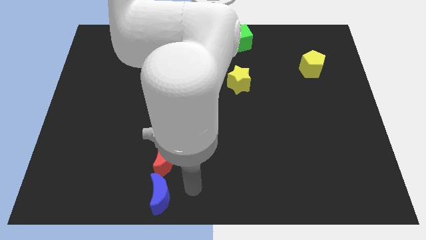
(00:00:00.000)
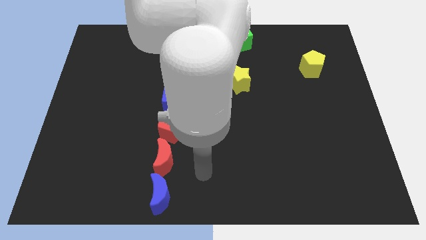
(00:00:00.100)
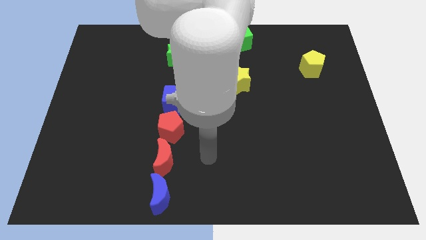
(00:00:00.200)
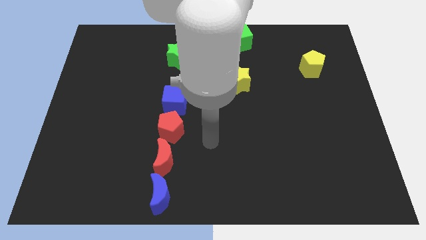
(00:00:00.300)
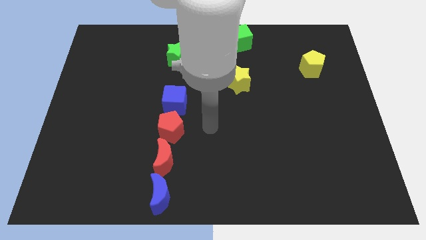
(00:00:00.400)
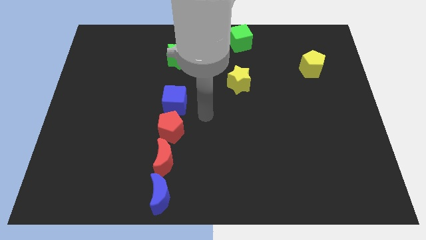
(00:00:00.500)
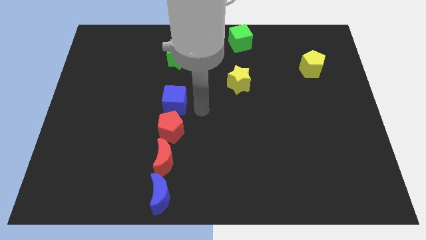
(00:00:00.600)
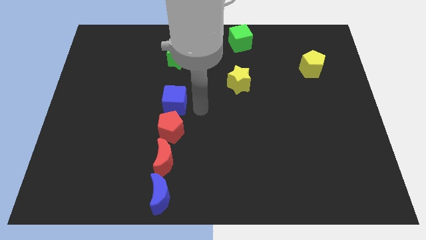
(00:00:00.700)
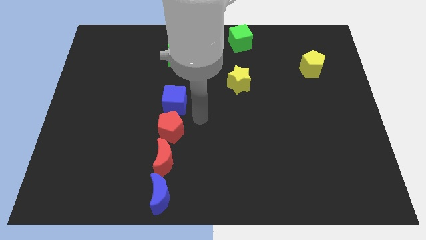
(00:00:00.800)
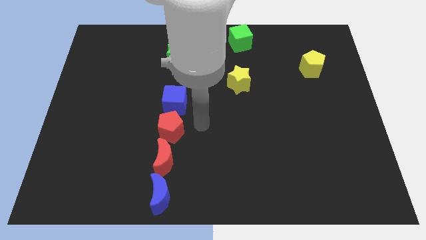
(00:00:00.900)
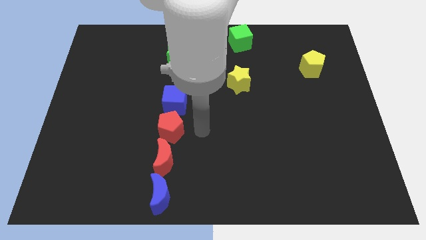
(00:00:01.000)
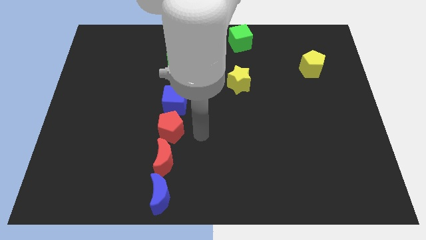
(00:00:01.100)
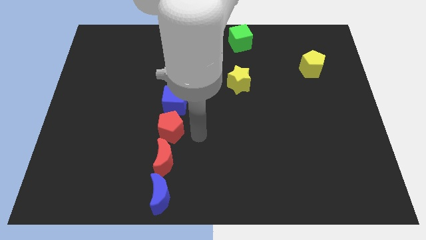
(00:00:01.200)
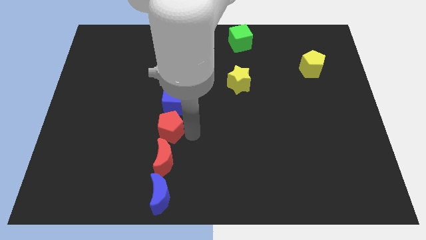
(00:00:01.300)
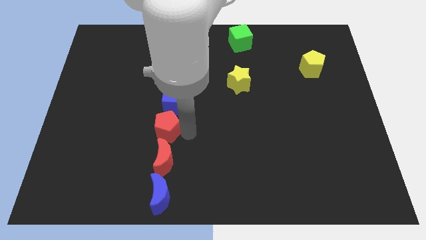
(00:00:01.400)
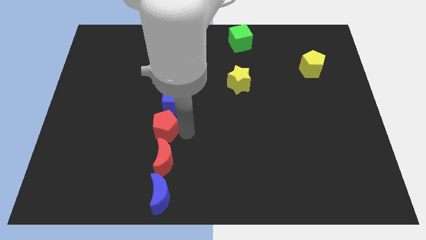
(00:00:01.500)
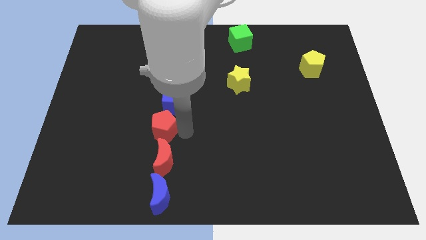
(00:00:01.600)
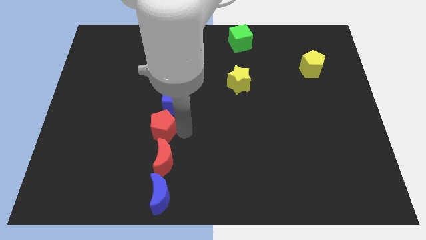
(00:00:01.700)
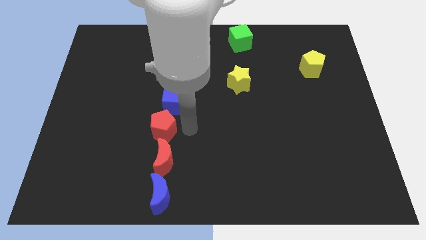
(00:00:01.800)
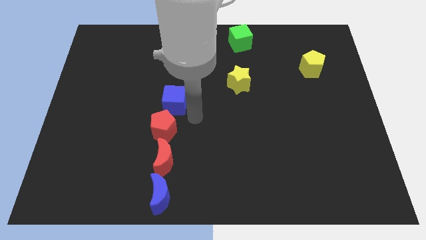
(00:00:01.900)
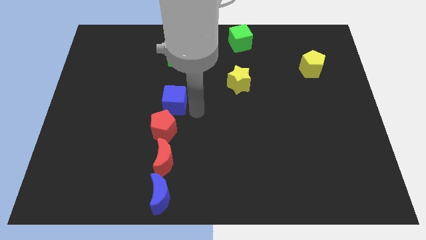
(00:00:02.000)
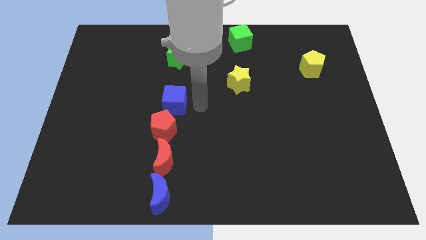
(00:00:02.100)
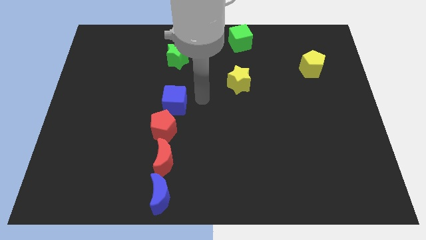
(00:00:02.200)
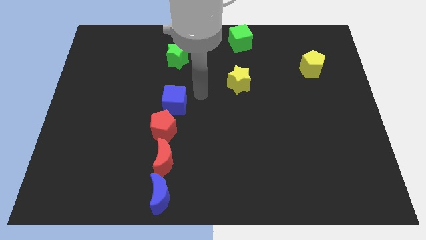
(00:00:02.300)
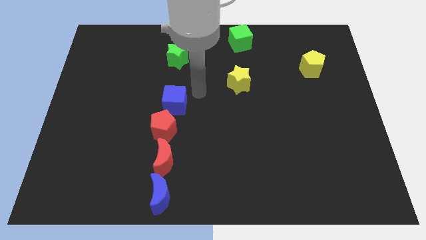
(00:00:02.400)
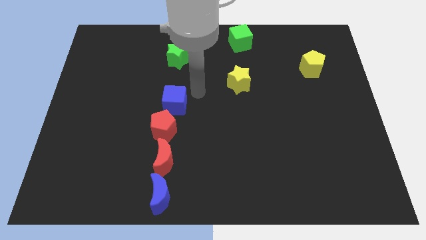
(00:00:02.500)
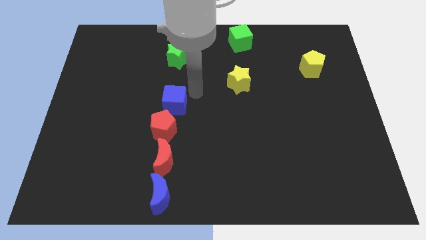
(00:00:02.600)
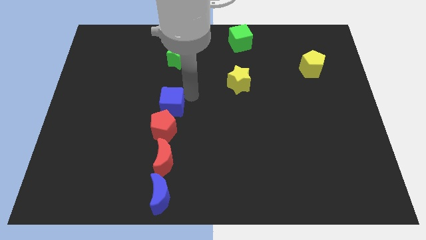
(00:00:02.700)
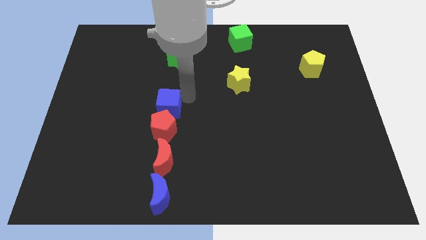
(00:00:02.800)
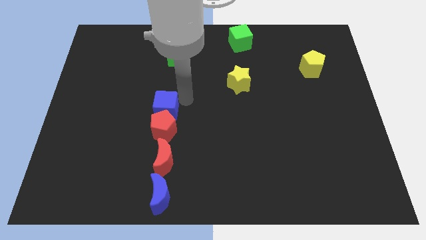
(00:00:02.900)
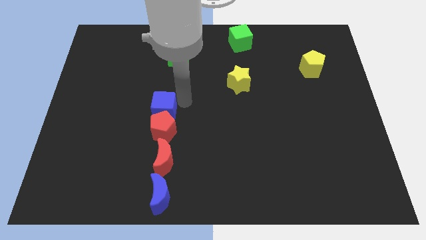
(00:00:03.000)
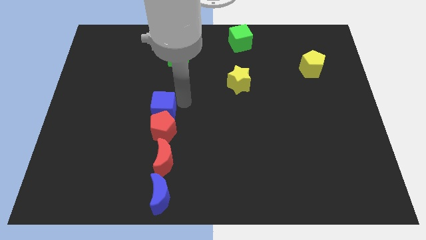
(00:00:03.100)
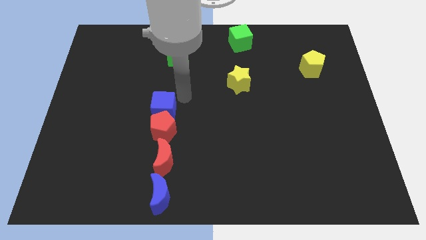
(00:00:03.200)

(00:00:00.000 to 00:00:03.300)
push the blue cube into the red pentagon

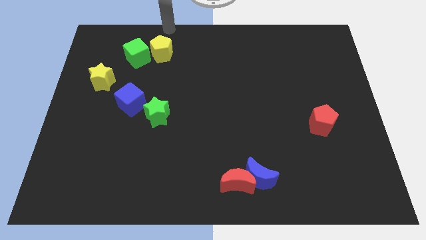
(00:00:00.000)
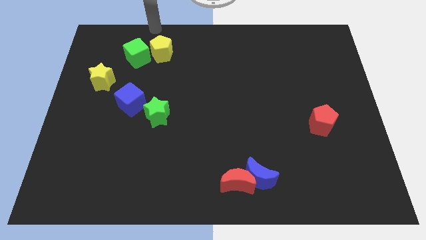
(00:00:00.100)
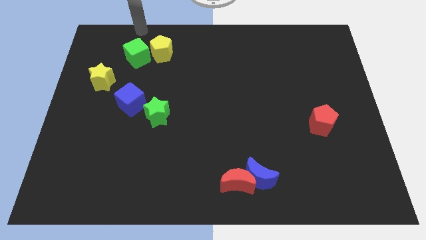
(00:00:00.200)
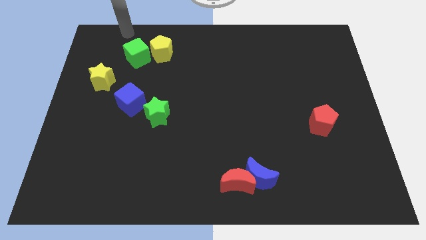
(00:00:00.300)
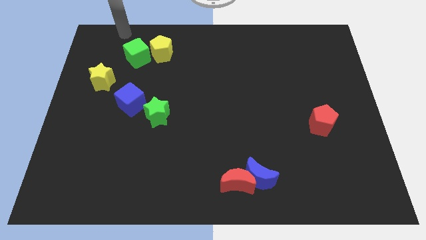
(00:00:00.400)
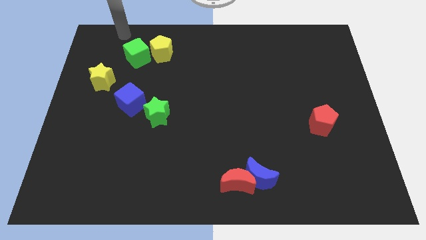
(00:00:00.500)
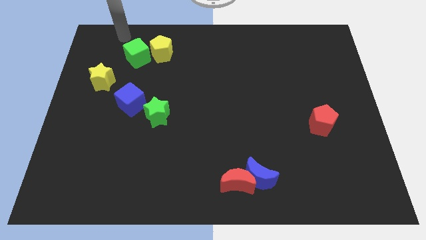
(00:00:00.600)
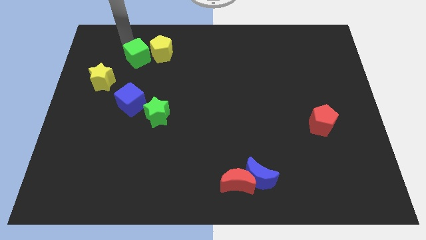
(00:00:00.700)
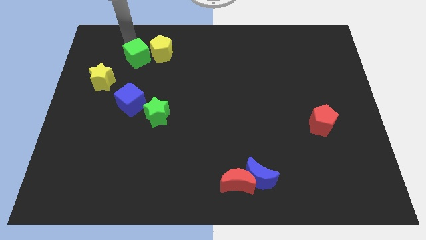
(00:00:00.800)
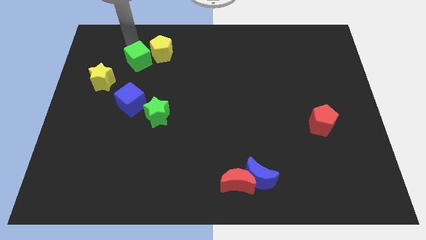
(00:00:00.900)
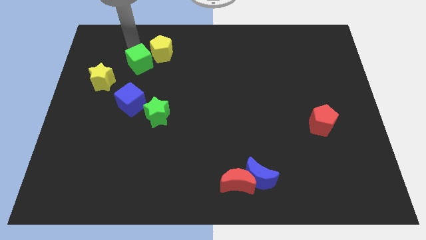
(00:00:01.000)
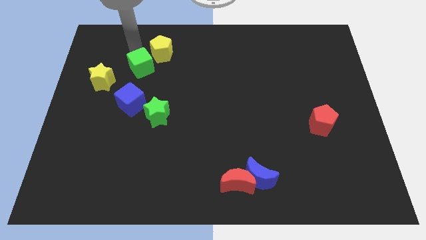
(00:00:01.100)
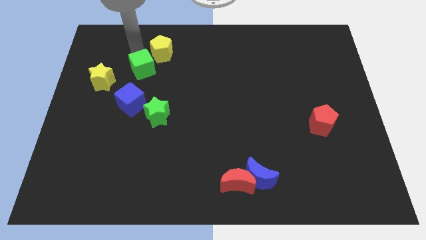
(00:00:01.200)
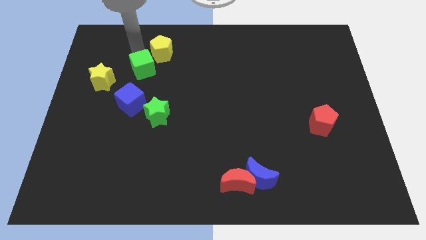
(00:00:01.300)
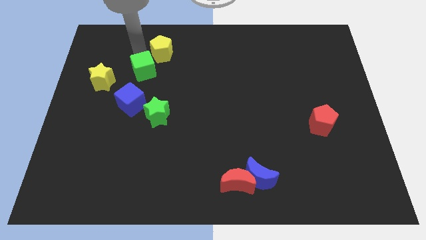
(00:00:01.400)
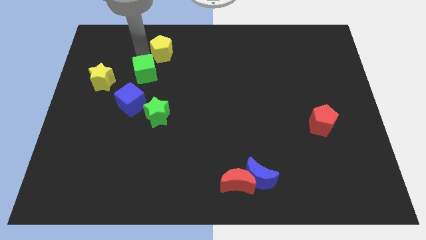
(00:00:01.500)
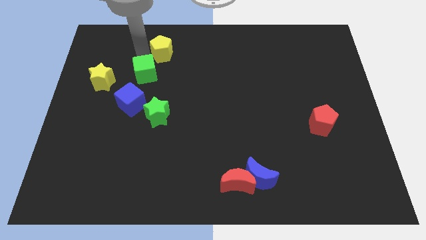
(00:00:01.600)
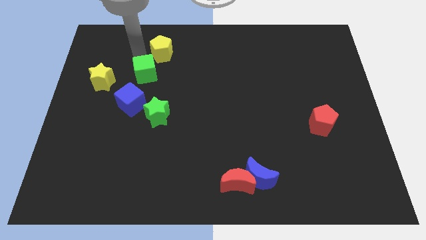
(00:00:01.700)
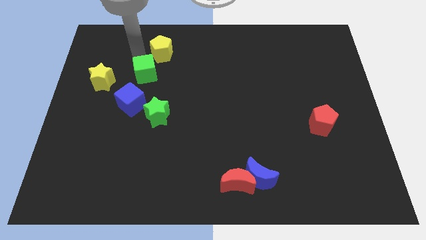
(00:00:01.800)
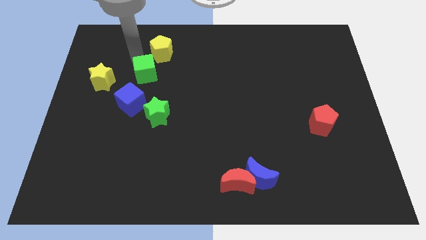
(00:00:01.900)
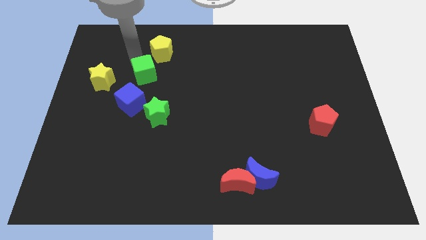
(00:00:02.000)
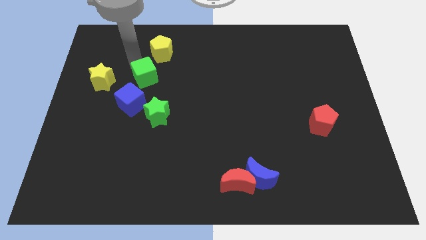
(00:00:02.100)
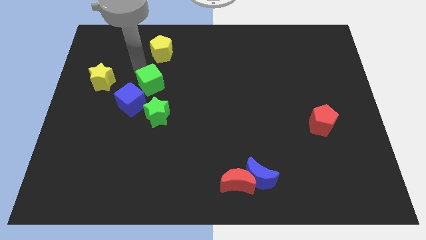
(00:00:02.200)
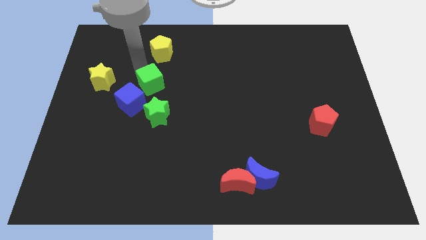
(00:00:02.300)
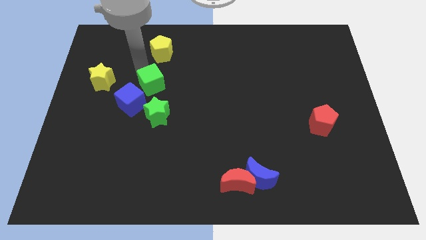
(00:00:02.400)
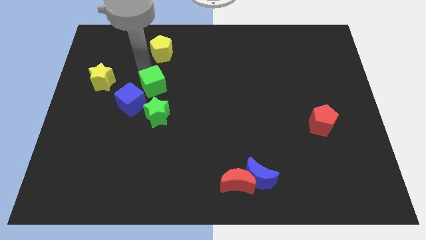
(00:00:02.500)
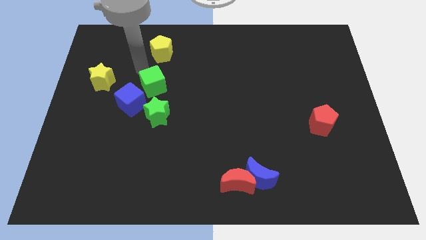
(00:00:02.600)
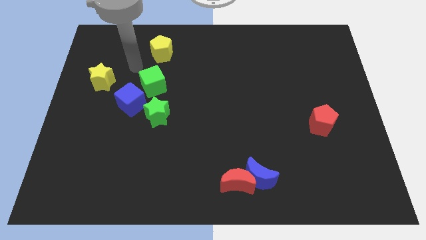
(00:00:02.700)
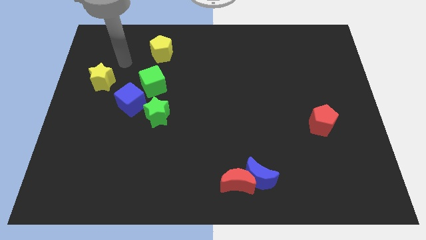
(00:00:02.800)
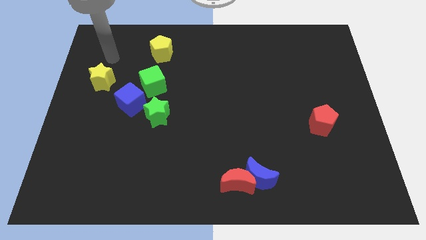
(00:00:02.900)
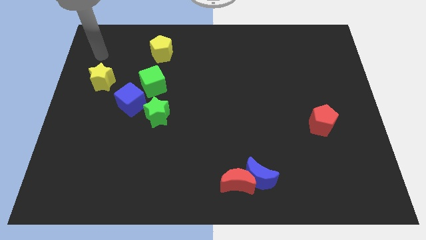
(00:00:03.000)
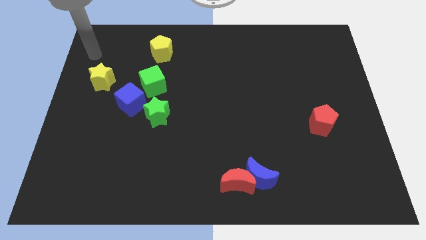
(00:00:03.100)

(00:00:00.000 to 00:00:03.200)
push green cube towards the green star

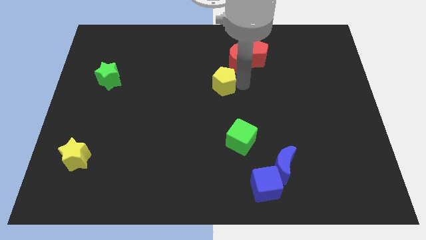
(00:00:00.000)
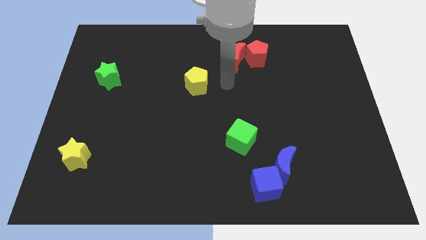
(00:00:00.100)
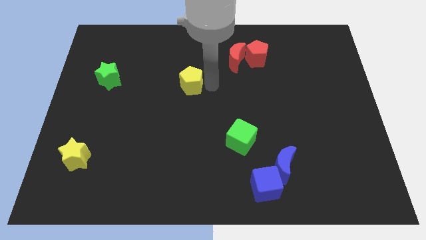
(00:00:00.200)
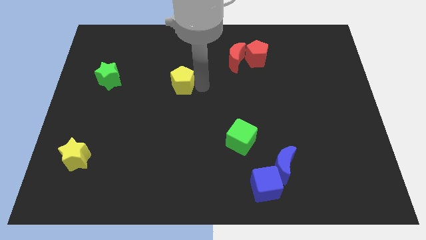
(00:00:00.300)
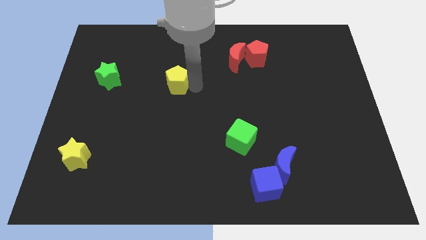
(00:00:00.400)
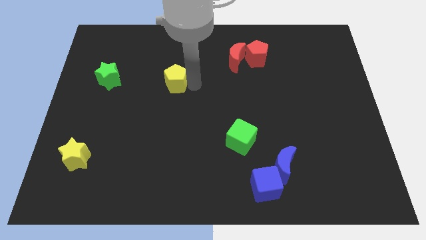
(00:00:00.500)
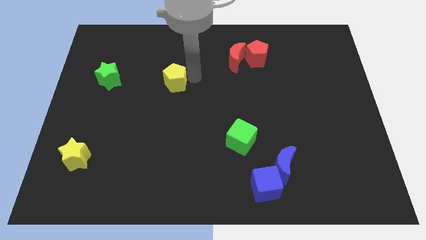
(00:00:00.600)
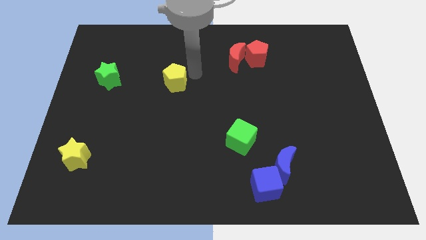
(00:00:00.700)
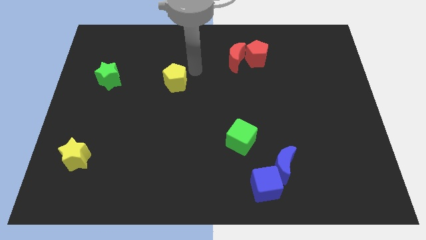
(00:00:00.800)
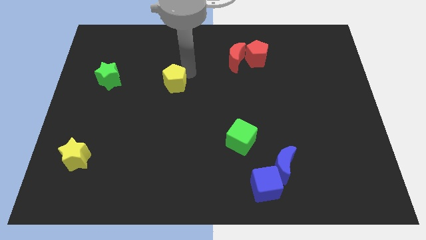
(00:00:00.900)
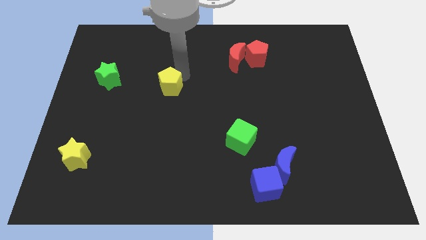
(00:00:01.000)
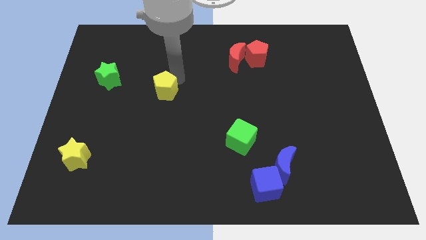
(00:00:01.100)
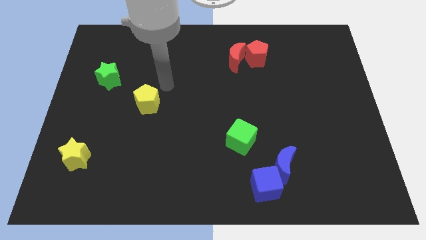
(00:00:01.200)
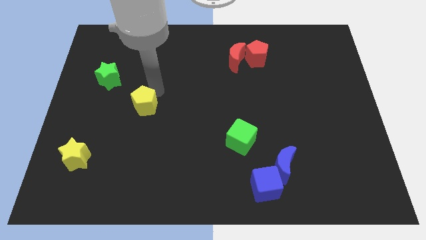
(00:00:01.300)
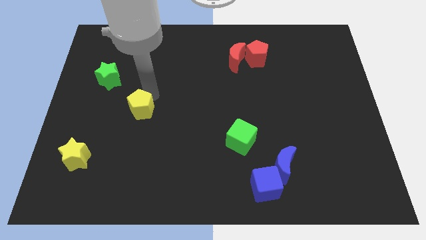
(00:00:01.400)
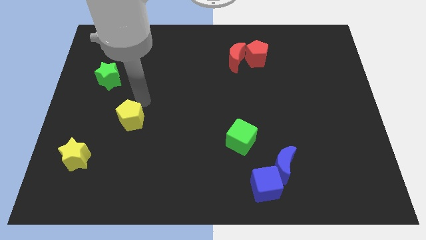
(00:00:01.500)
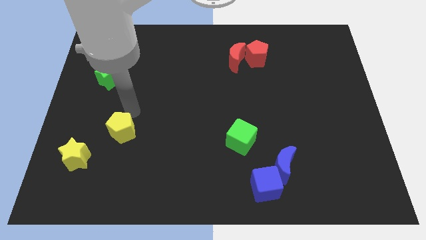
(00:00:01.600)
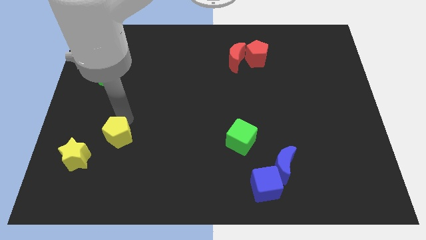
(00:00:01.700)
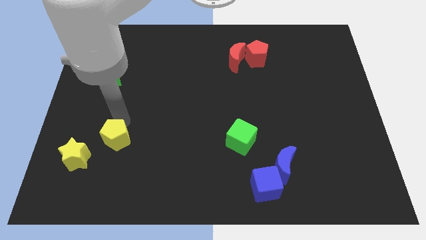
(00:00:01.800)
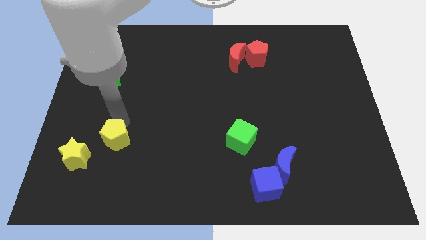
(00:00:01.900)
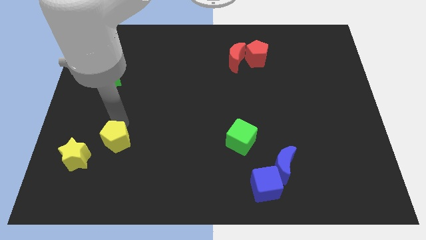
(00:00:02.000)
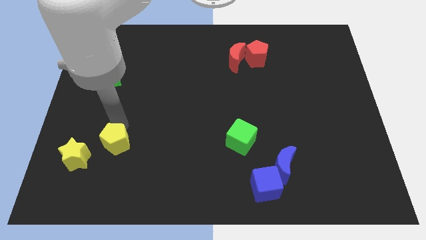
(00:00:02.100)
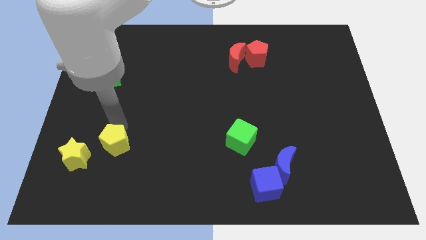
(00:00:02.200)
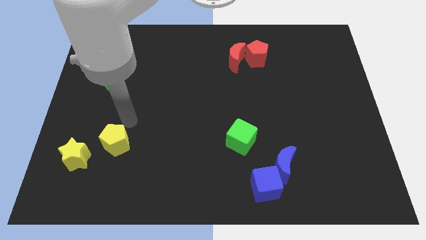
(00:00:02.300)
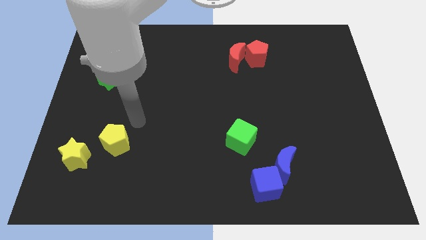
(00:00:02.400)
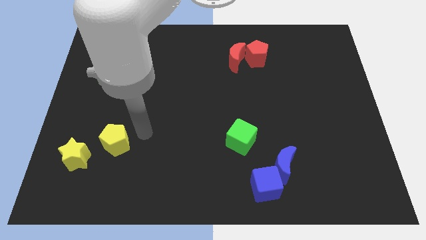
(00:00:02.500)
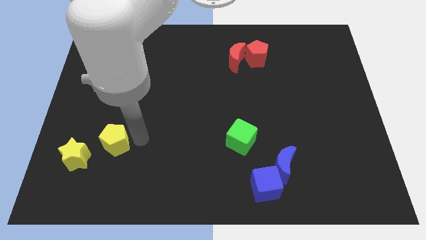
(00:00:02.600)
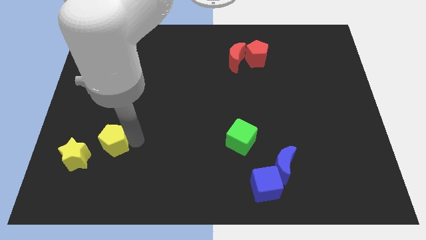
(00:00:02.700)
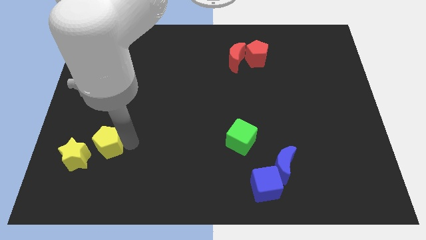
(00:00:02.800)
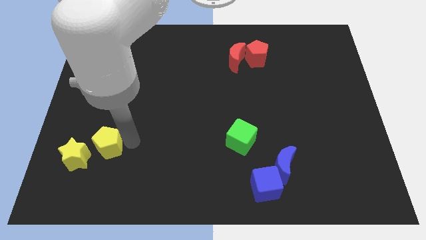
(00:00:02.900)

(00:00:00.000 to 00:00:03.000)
move yellow pentagon near yellow star
